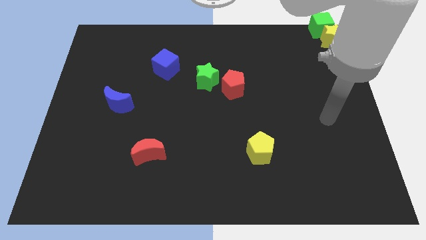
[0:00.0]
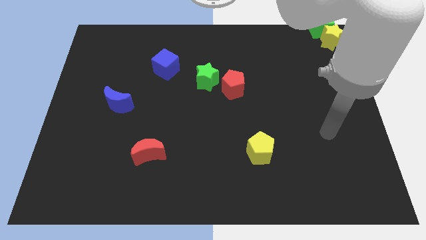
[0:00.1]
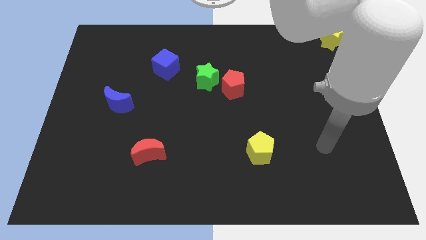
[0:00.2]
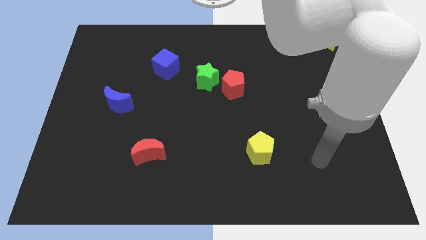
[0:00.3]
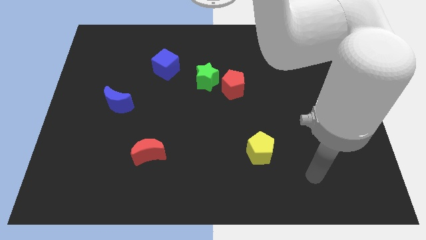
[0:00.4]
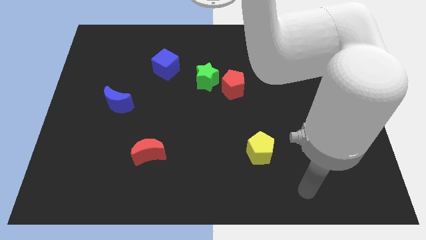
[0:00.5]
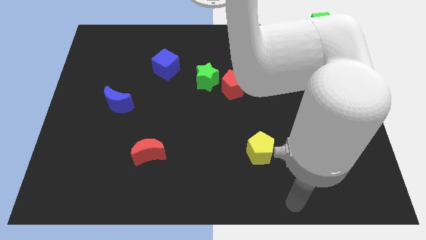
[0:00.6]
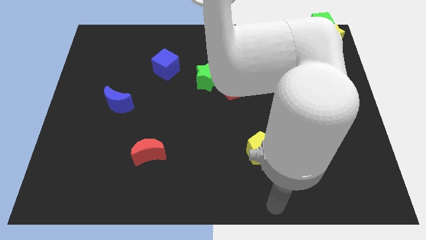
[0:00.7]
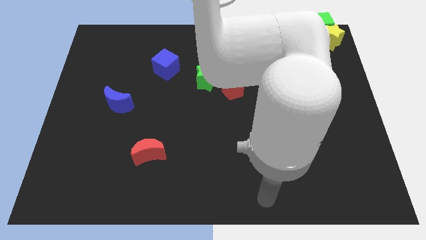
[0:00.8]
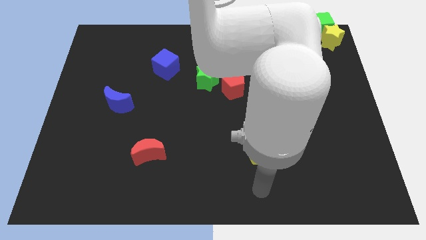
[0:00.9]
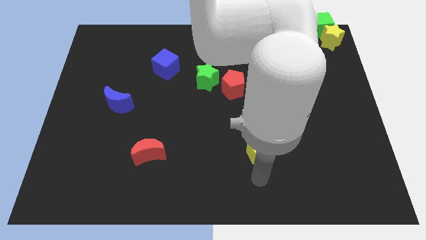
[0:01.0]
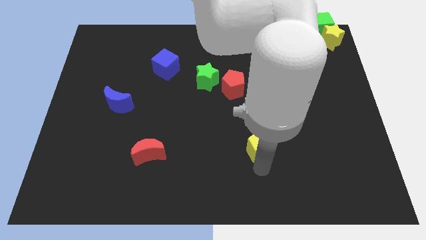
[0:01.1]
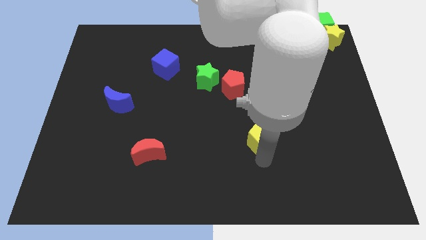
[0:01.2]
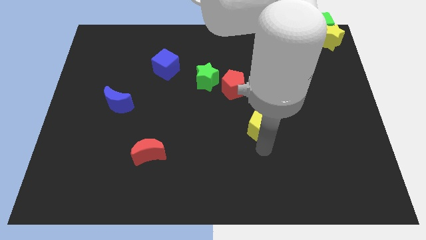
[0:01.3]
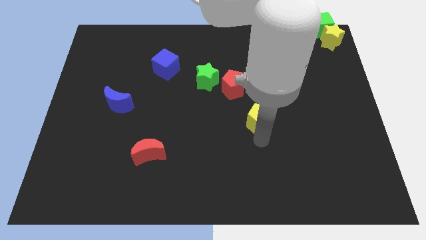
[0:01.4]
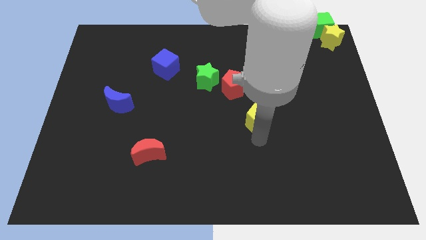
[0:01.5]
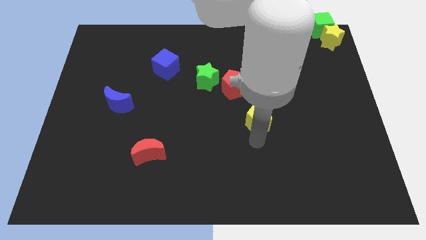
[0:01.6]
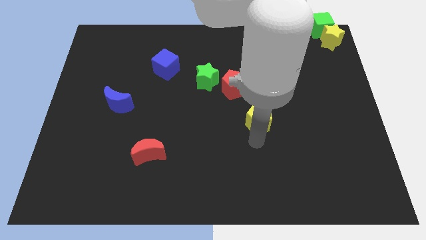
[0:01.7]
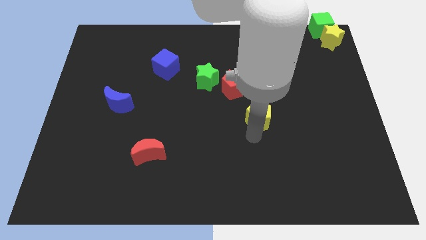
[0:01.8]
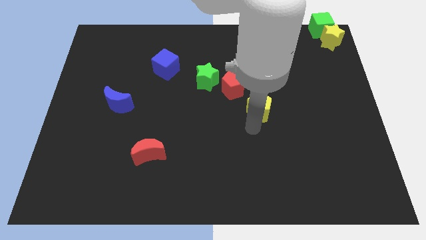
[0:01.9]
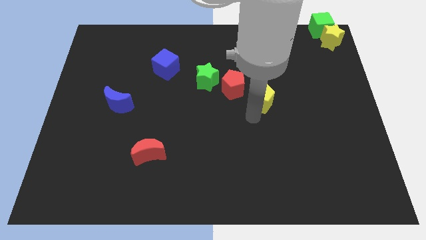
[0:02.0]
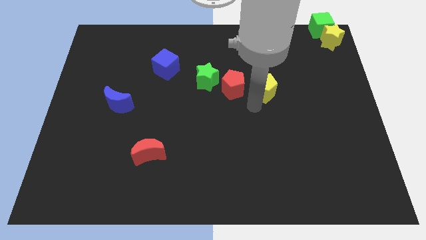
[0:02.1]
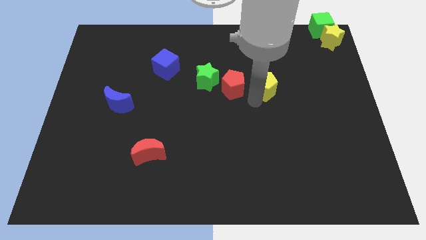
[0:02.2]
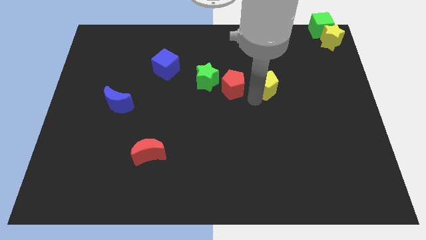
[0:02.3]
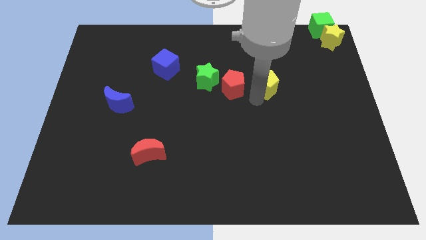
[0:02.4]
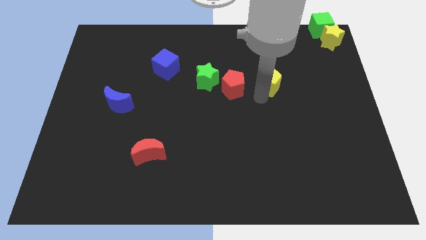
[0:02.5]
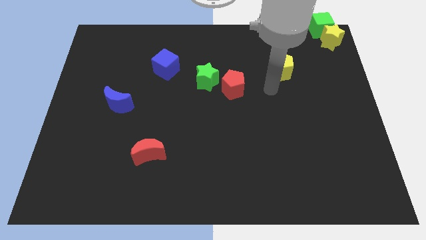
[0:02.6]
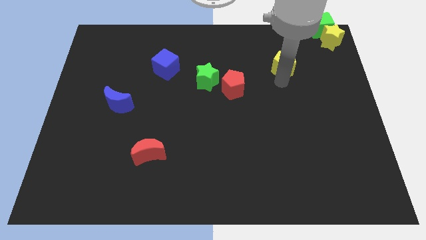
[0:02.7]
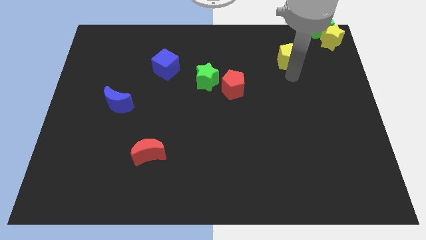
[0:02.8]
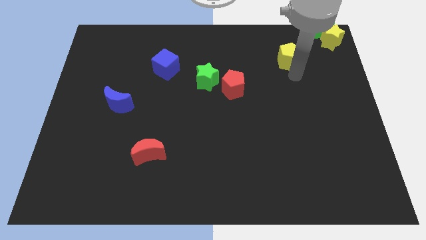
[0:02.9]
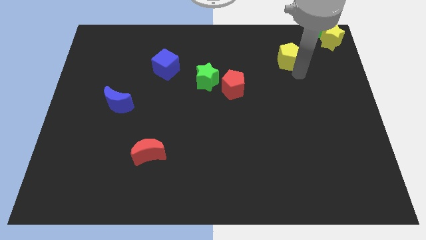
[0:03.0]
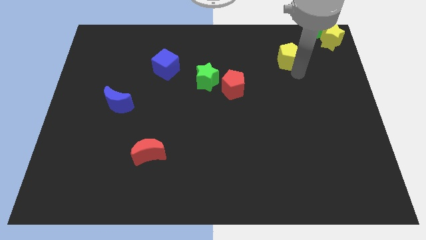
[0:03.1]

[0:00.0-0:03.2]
push the yellow pentagon towards the green cube

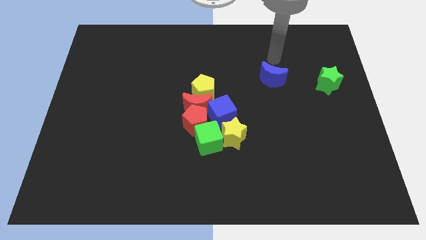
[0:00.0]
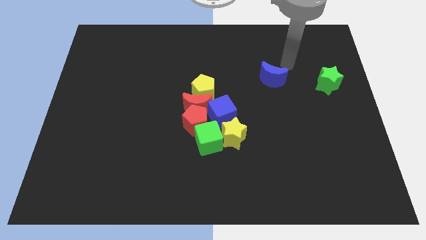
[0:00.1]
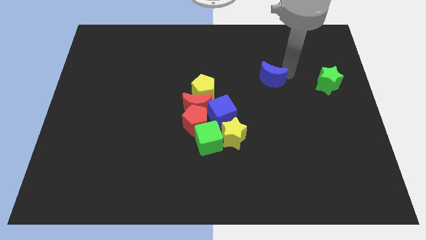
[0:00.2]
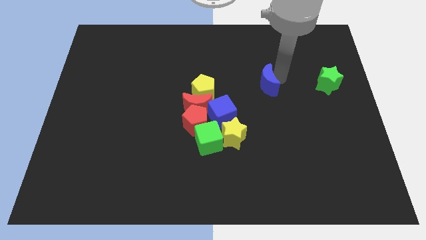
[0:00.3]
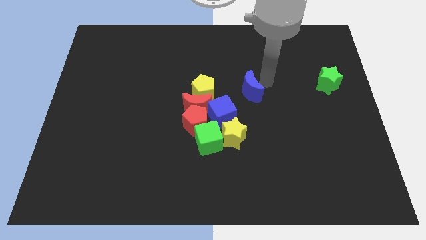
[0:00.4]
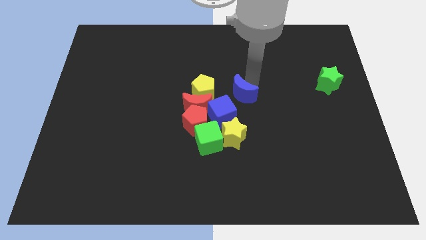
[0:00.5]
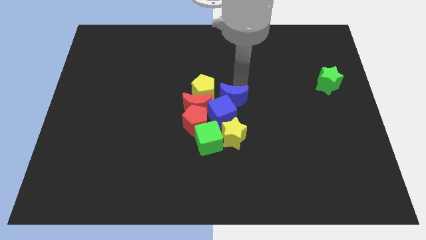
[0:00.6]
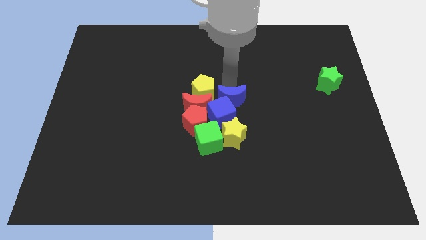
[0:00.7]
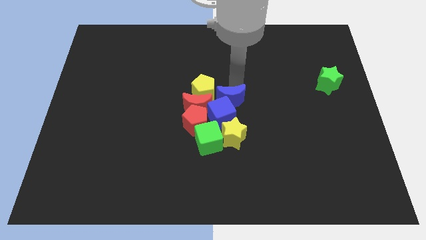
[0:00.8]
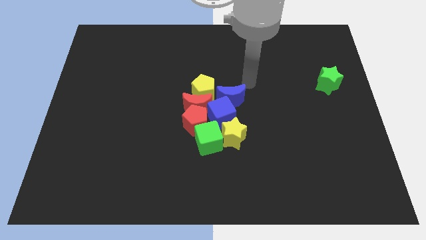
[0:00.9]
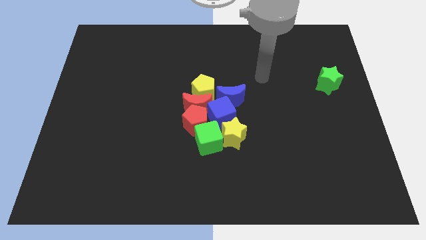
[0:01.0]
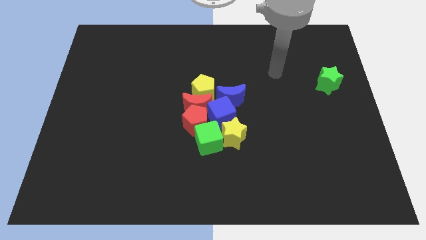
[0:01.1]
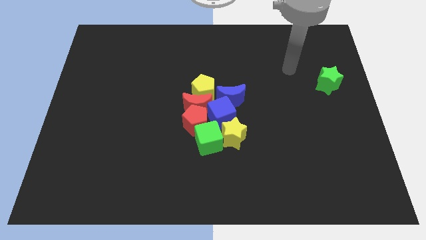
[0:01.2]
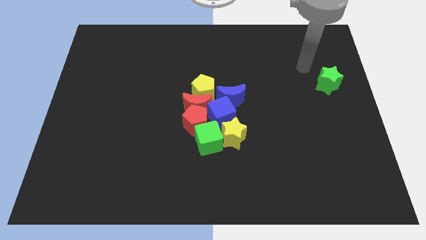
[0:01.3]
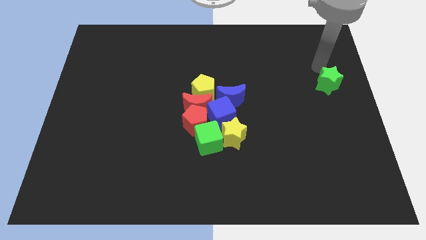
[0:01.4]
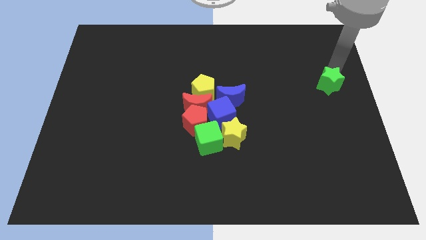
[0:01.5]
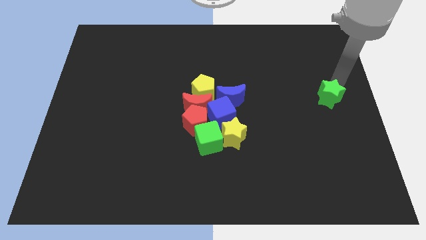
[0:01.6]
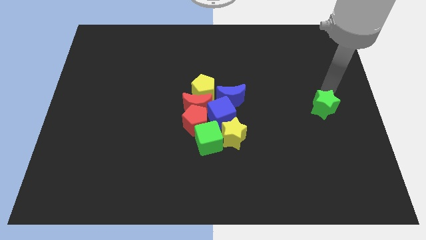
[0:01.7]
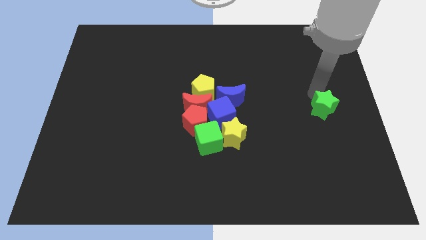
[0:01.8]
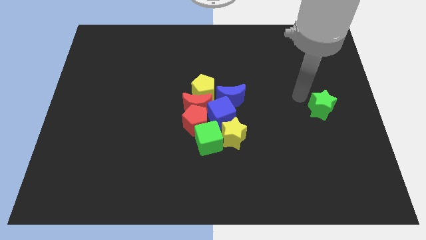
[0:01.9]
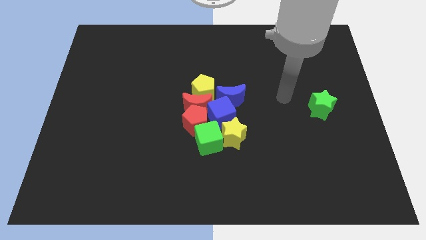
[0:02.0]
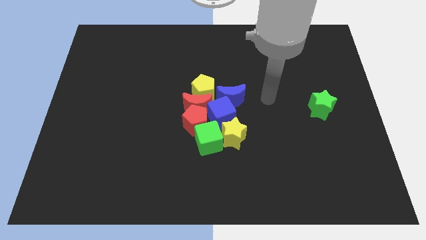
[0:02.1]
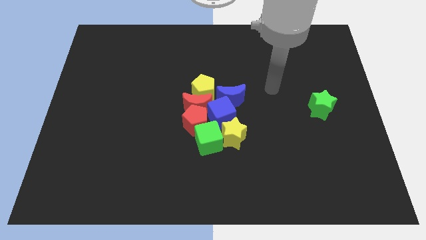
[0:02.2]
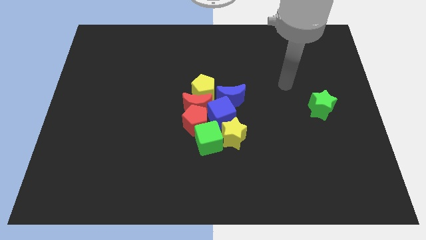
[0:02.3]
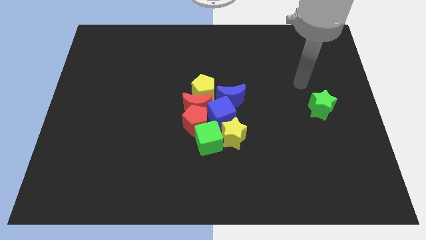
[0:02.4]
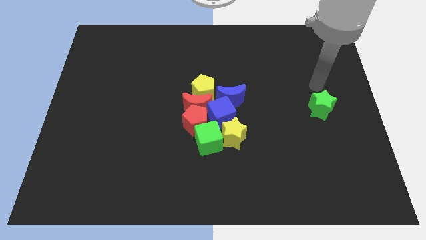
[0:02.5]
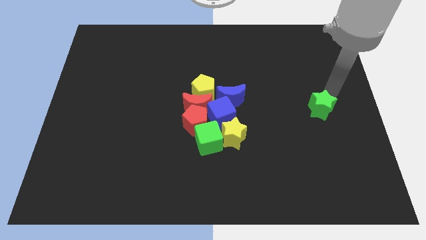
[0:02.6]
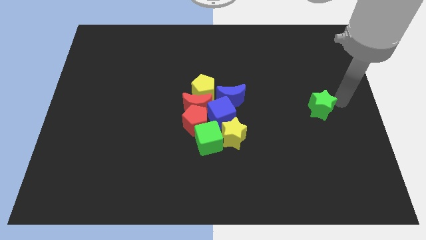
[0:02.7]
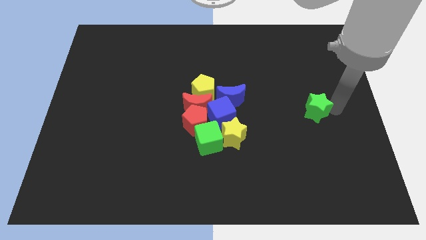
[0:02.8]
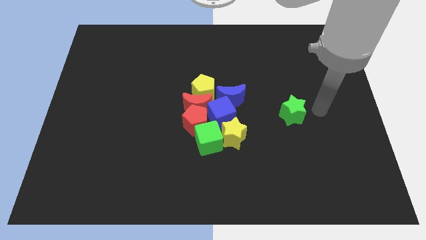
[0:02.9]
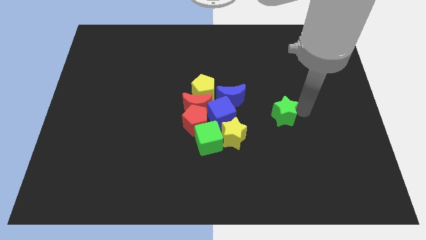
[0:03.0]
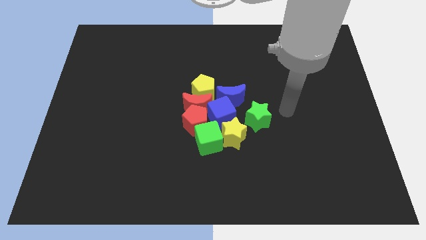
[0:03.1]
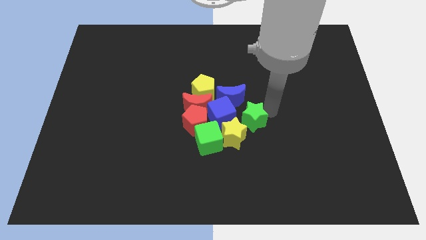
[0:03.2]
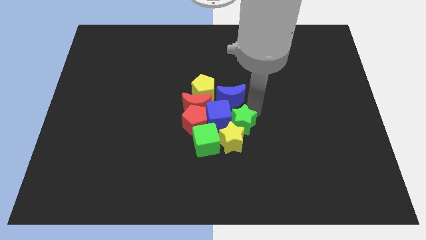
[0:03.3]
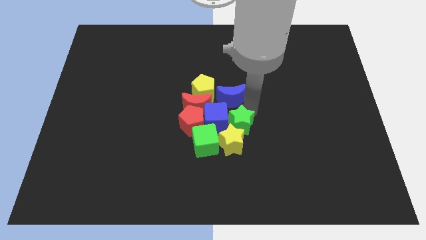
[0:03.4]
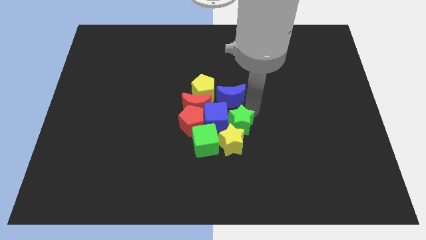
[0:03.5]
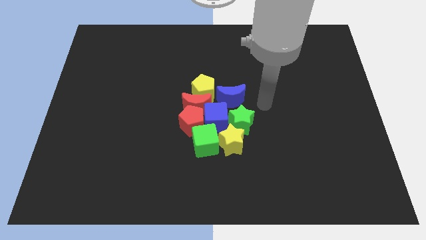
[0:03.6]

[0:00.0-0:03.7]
push the blue crescent and green star into the group of blocks

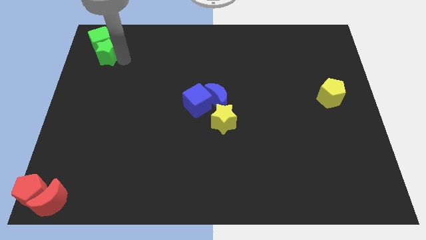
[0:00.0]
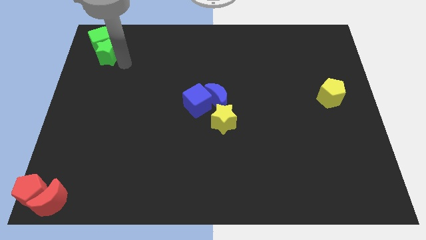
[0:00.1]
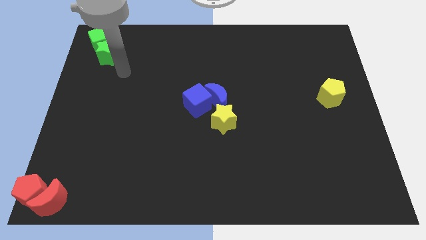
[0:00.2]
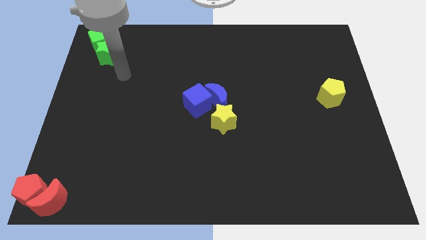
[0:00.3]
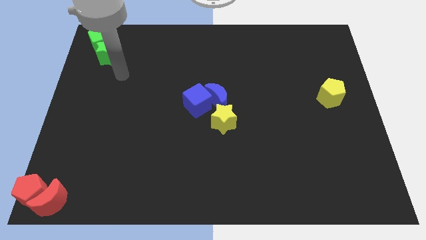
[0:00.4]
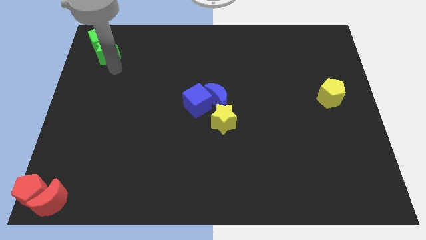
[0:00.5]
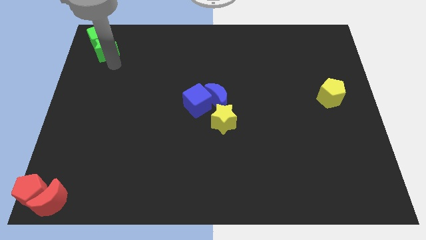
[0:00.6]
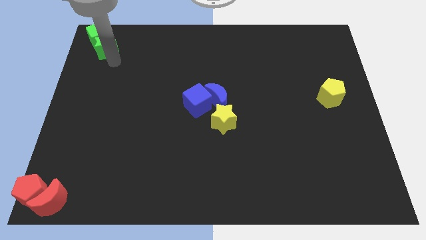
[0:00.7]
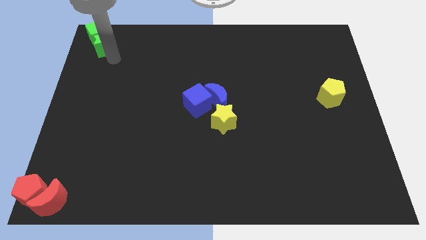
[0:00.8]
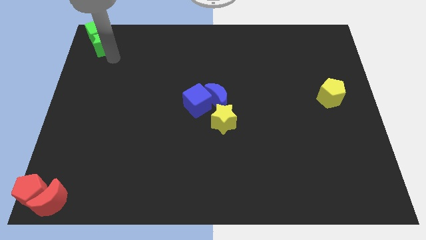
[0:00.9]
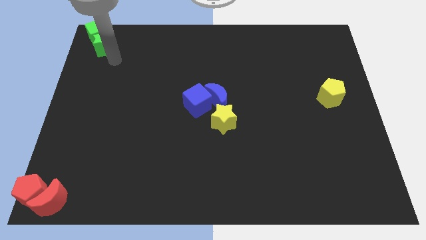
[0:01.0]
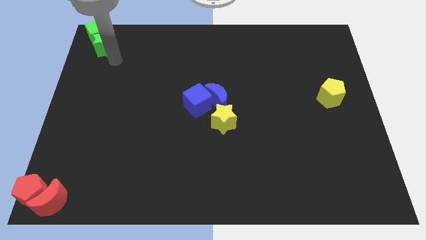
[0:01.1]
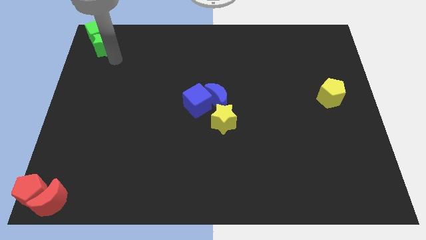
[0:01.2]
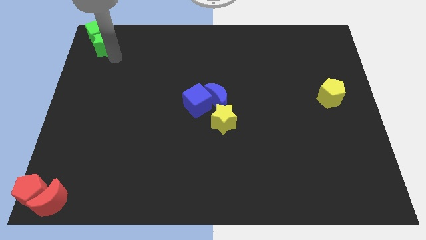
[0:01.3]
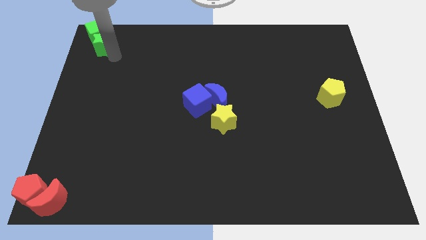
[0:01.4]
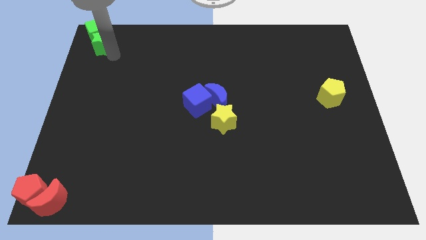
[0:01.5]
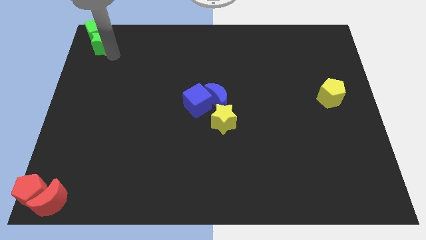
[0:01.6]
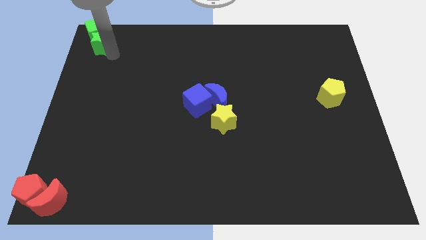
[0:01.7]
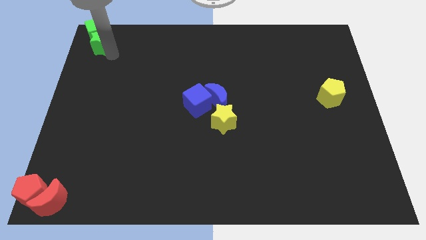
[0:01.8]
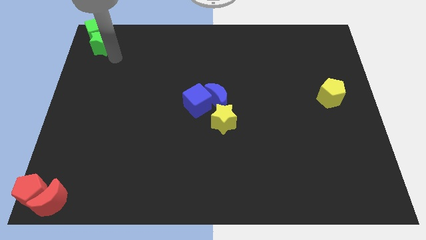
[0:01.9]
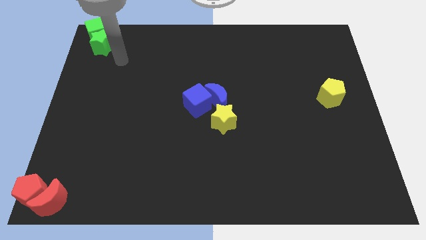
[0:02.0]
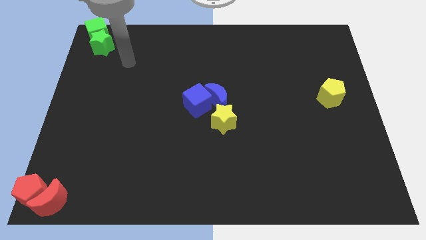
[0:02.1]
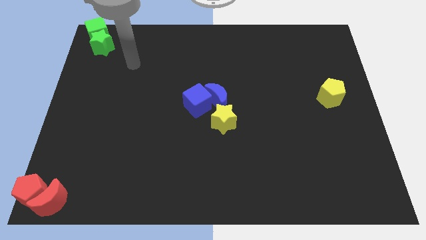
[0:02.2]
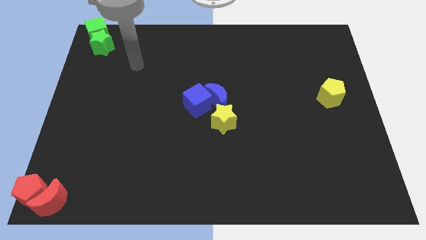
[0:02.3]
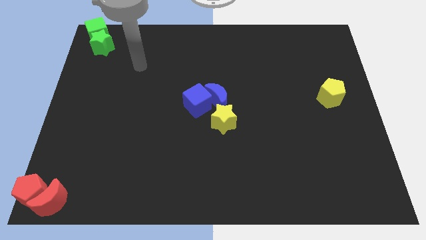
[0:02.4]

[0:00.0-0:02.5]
slightly push the green blocks towards top left side corner of the board
